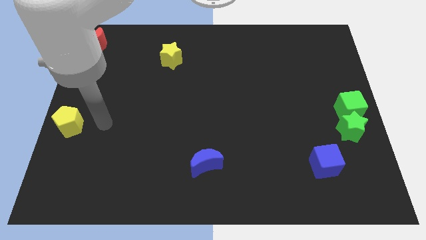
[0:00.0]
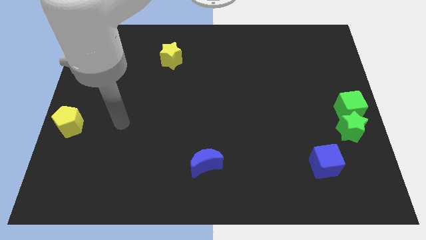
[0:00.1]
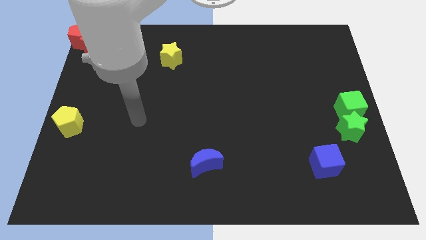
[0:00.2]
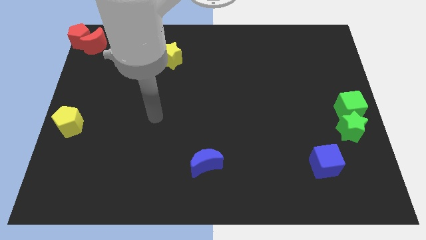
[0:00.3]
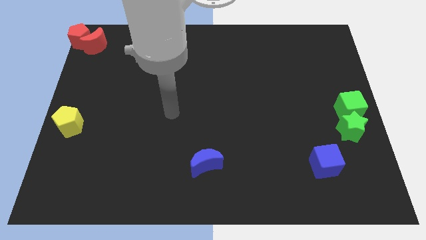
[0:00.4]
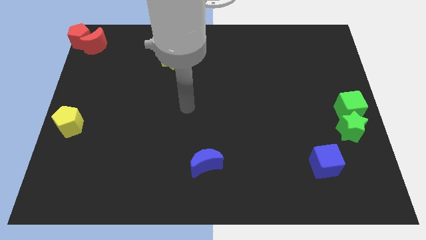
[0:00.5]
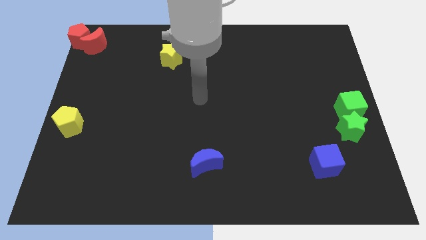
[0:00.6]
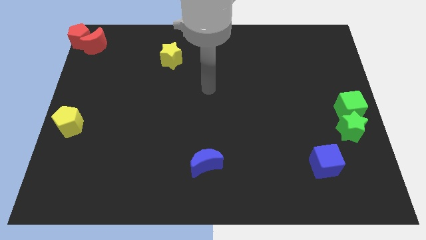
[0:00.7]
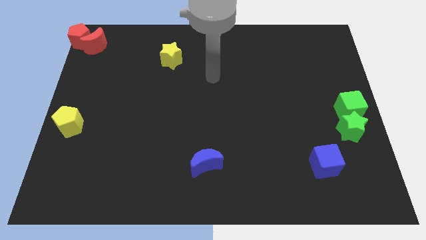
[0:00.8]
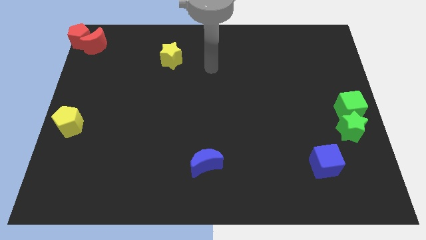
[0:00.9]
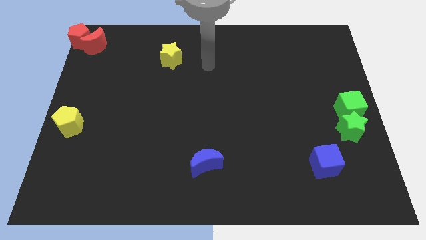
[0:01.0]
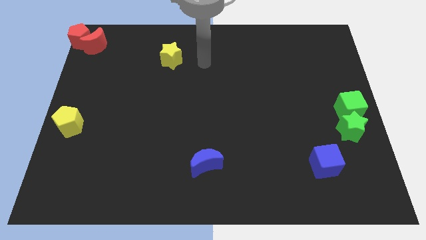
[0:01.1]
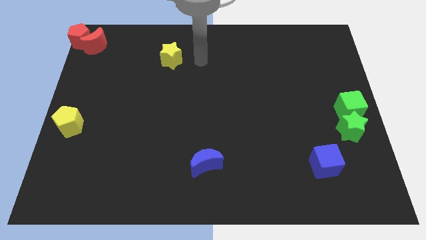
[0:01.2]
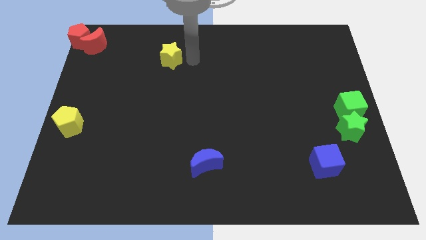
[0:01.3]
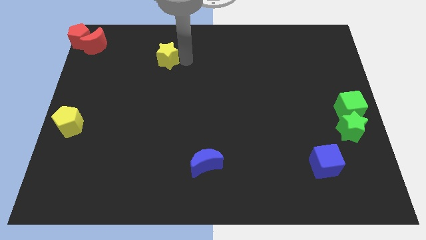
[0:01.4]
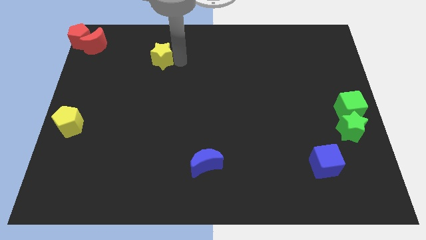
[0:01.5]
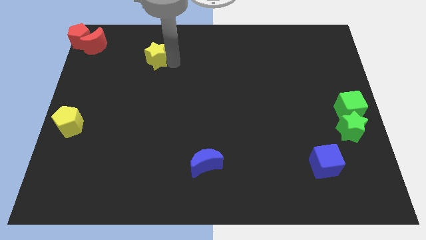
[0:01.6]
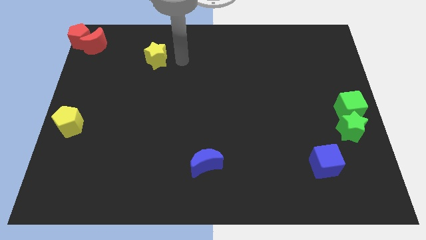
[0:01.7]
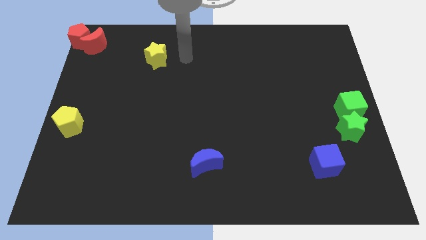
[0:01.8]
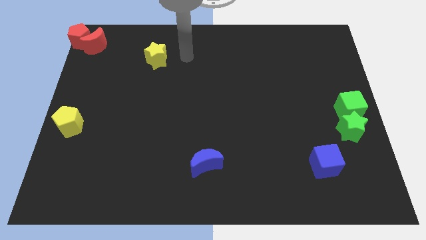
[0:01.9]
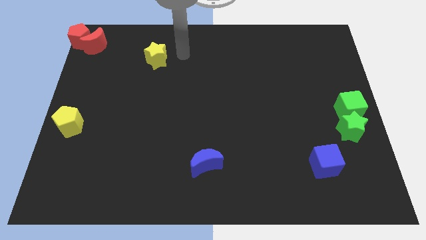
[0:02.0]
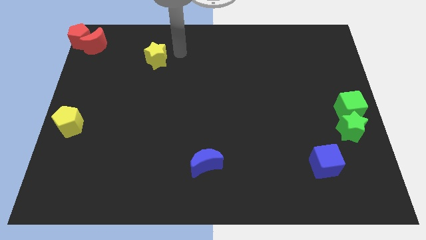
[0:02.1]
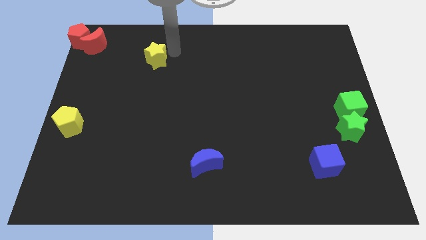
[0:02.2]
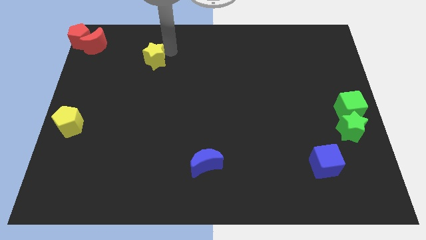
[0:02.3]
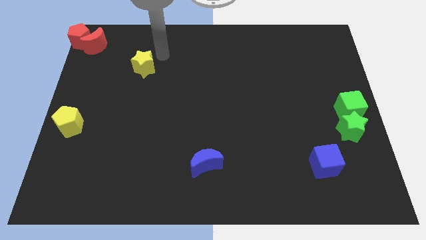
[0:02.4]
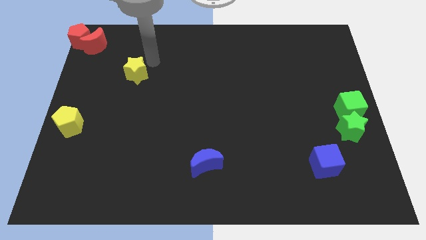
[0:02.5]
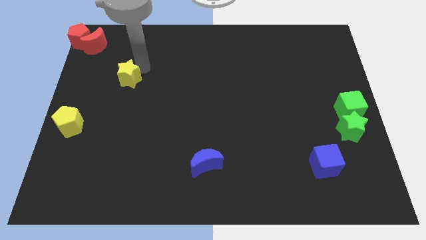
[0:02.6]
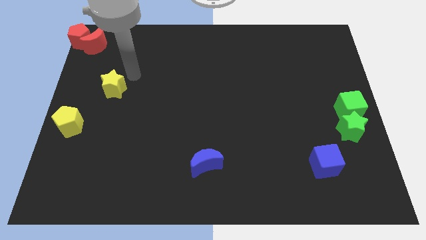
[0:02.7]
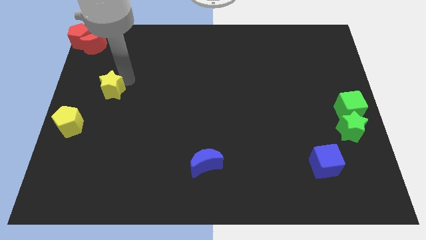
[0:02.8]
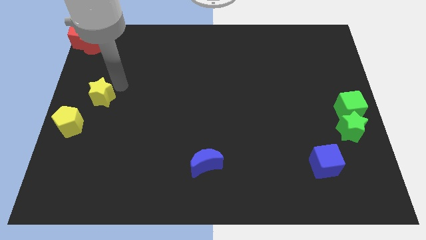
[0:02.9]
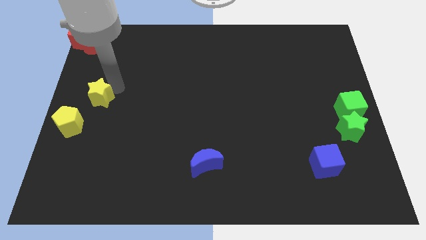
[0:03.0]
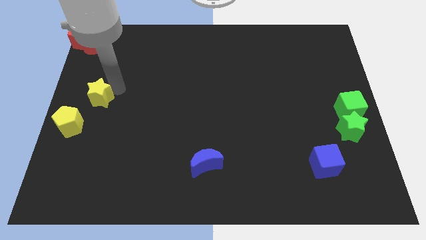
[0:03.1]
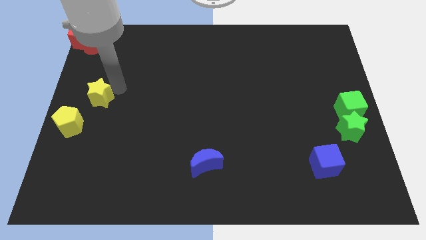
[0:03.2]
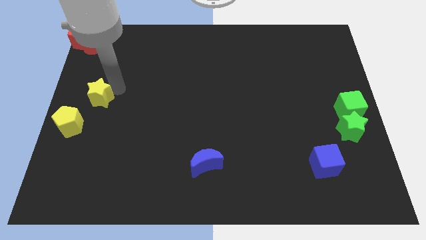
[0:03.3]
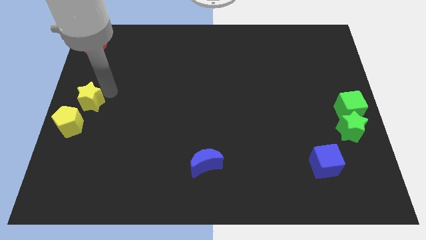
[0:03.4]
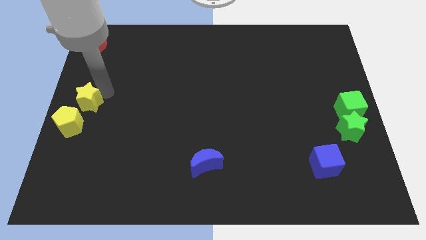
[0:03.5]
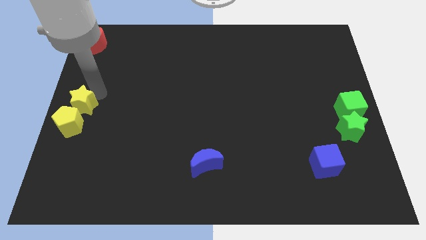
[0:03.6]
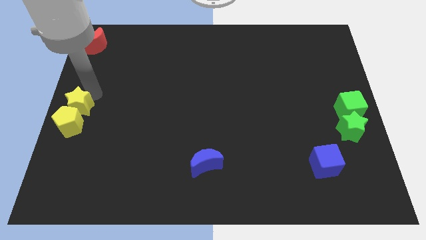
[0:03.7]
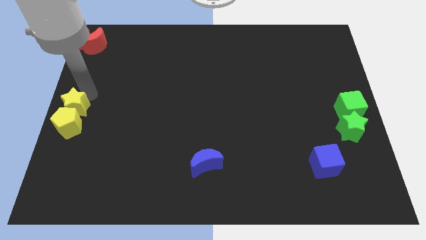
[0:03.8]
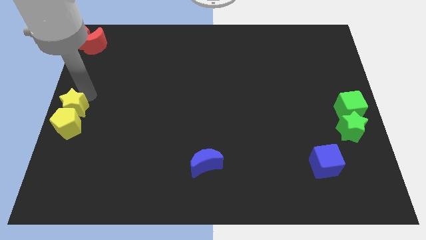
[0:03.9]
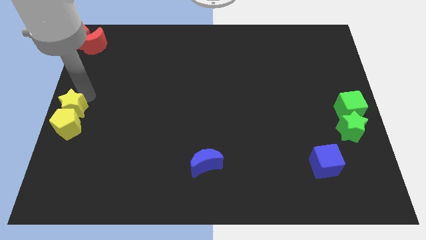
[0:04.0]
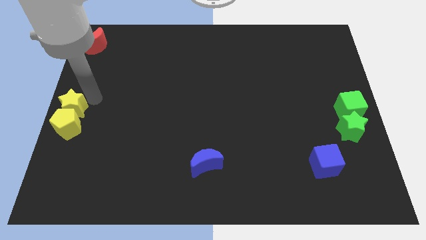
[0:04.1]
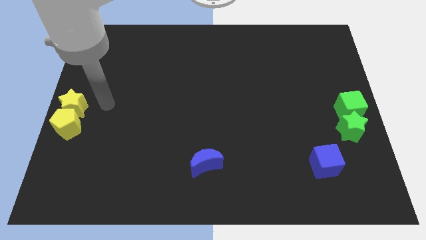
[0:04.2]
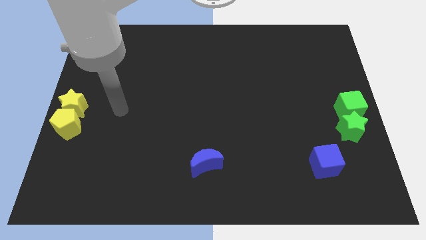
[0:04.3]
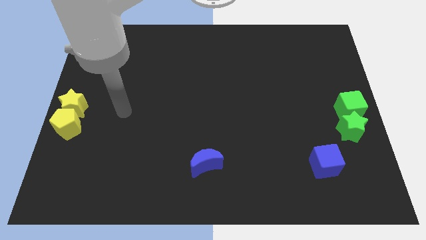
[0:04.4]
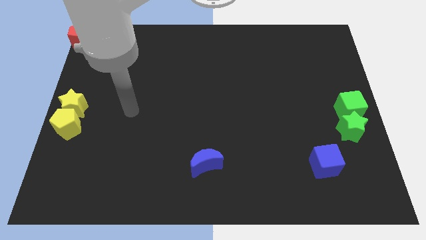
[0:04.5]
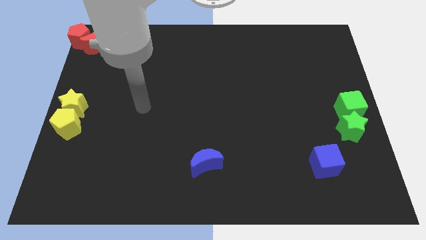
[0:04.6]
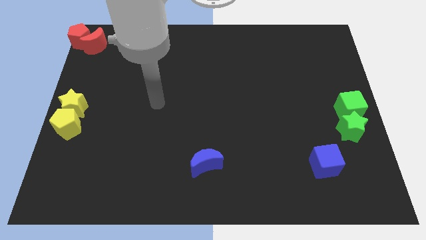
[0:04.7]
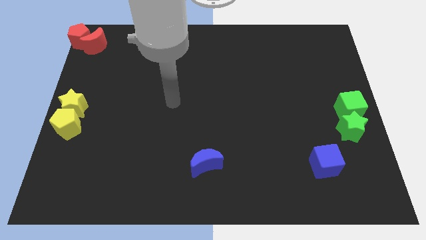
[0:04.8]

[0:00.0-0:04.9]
place the yellow star beside the yellow pentagon

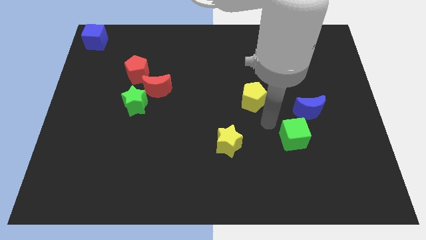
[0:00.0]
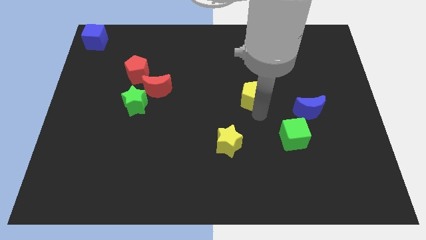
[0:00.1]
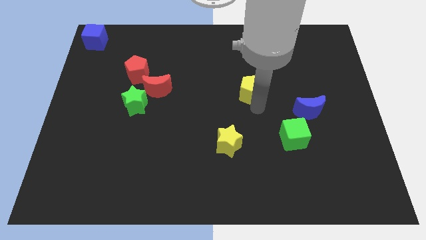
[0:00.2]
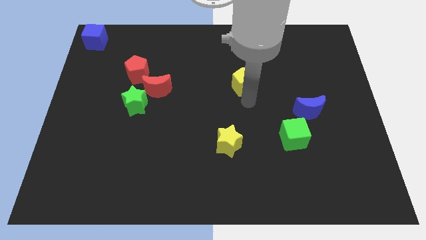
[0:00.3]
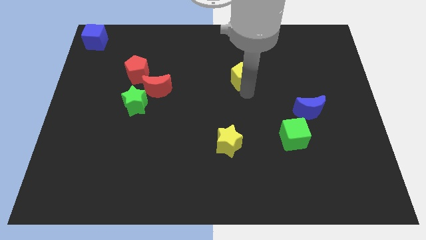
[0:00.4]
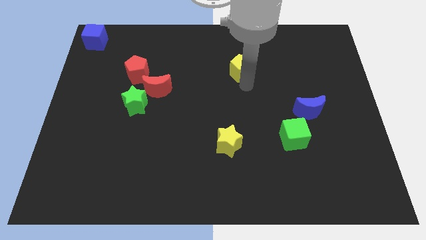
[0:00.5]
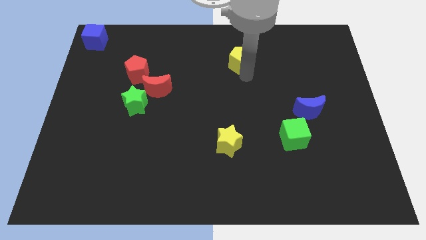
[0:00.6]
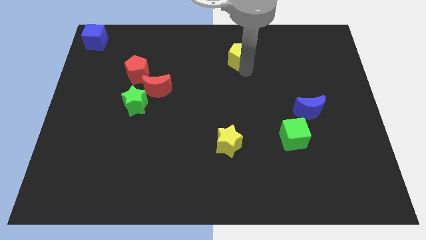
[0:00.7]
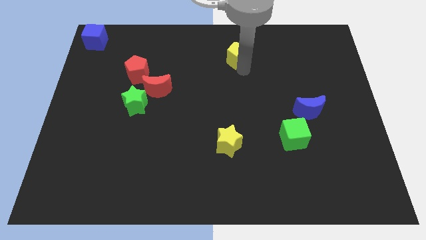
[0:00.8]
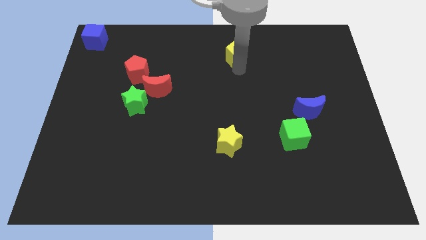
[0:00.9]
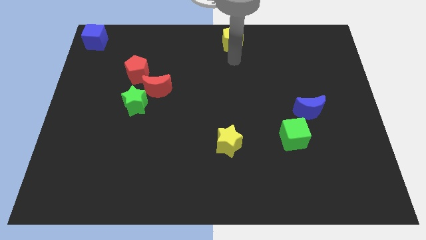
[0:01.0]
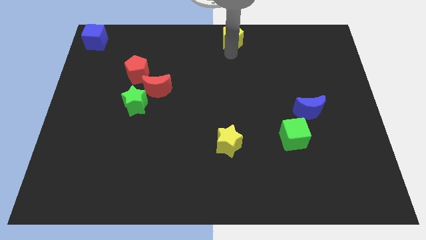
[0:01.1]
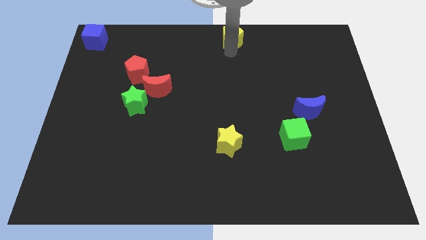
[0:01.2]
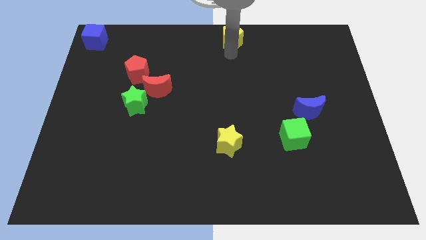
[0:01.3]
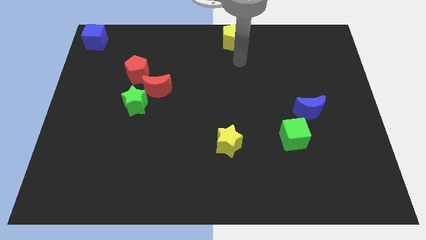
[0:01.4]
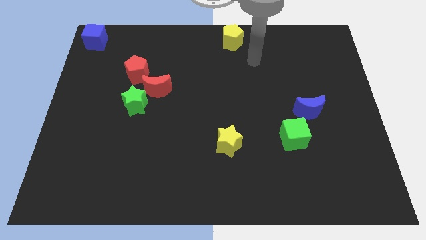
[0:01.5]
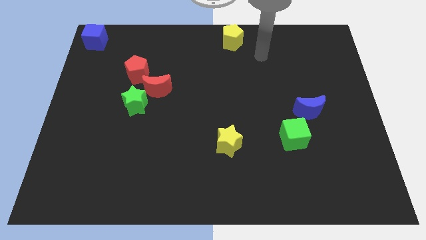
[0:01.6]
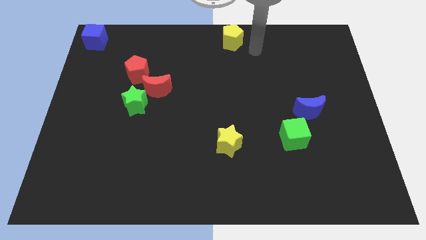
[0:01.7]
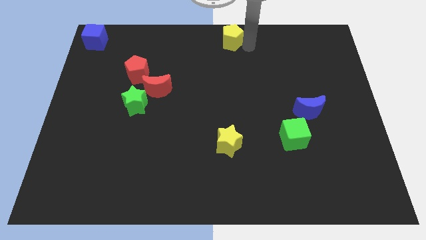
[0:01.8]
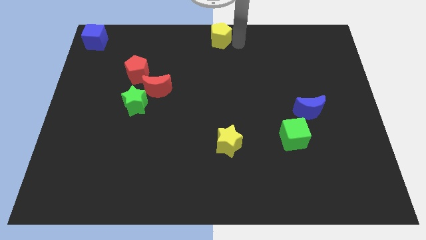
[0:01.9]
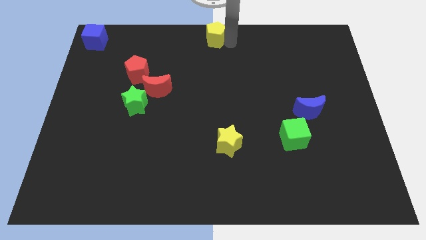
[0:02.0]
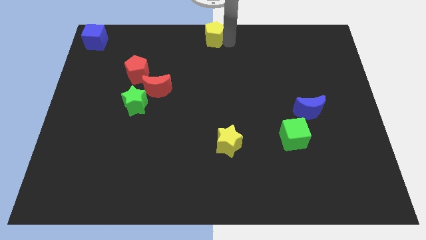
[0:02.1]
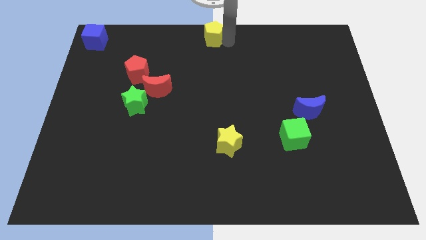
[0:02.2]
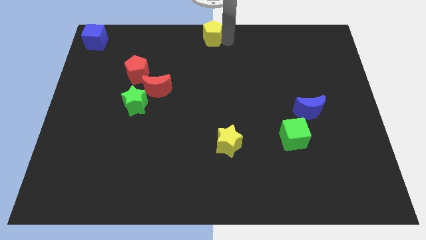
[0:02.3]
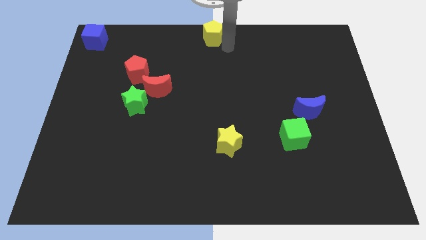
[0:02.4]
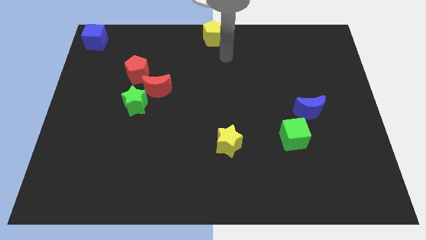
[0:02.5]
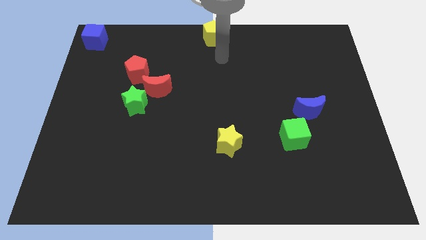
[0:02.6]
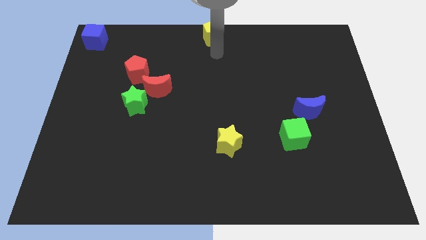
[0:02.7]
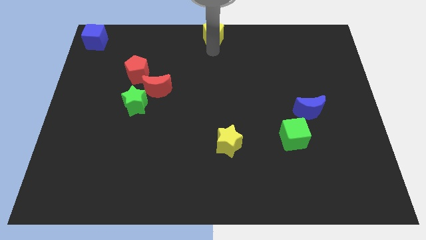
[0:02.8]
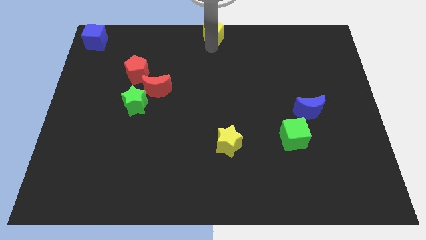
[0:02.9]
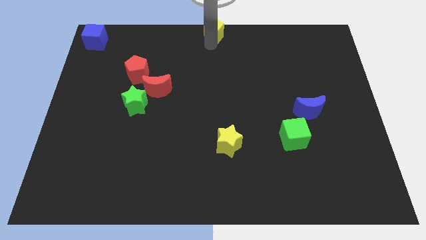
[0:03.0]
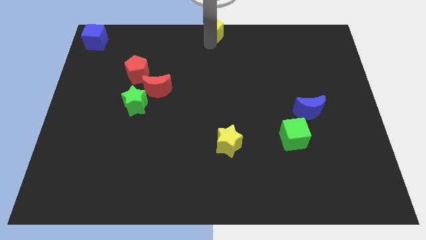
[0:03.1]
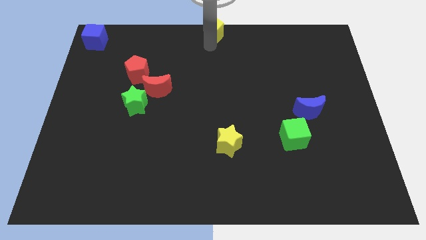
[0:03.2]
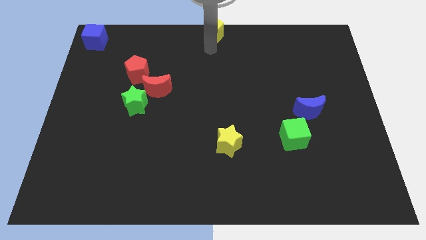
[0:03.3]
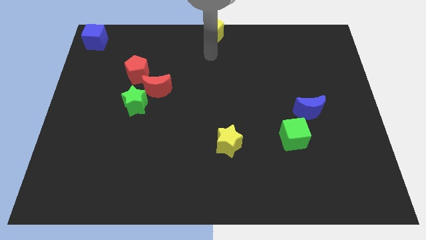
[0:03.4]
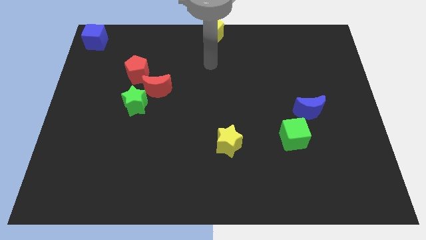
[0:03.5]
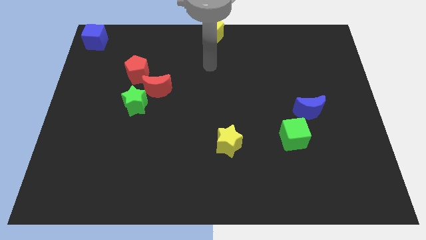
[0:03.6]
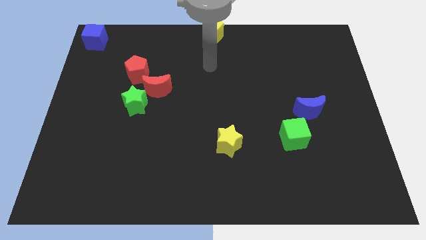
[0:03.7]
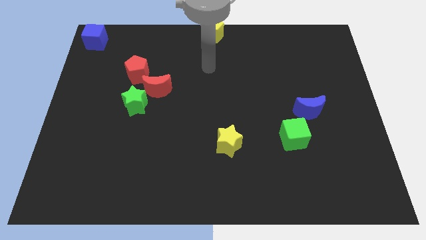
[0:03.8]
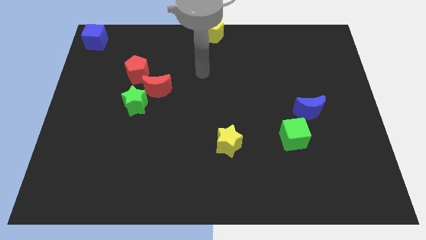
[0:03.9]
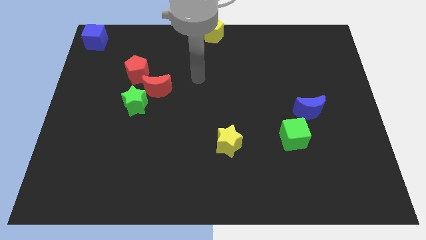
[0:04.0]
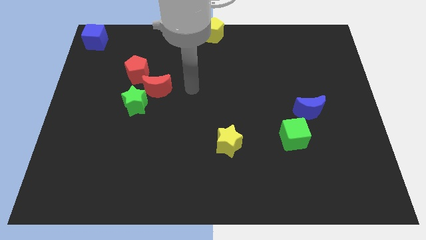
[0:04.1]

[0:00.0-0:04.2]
push the yellow pentagon to the top center of the board
